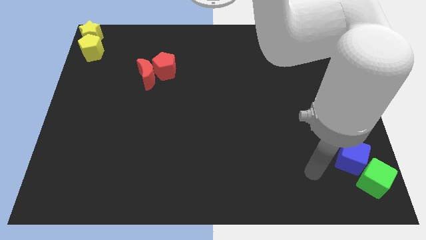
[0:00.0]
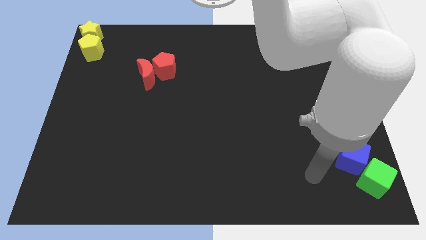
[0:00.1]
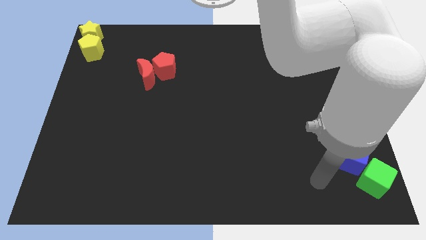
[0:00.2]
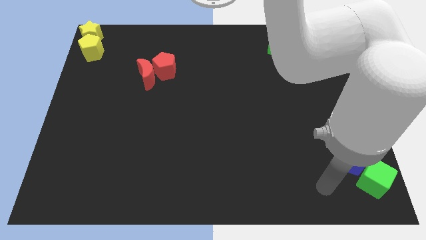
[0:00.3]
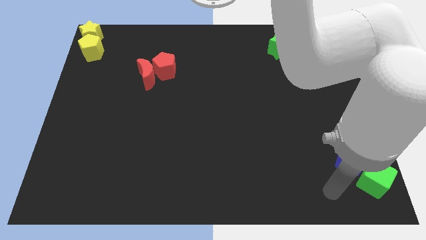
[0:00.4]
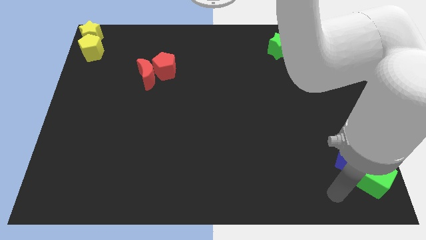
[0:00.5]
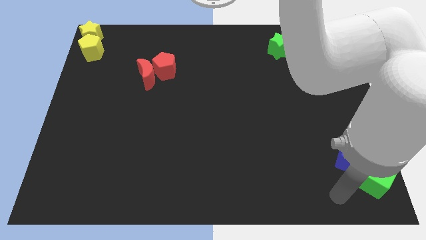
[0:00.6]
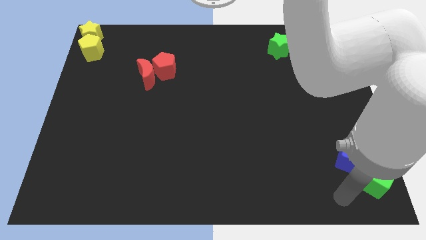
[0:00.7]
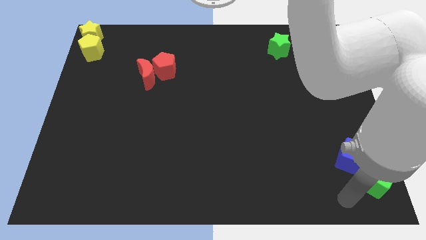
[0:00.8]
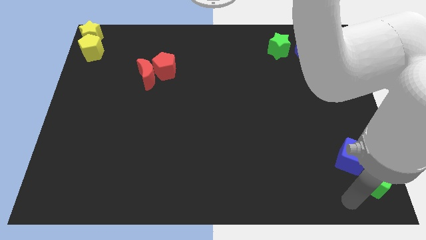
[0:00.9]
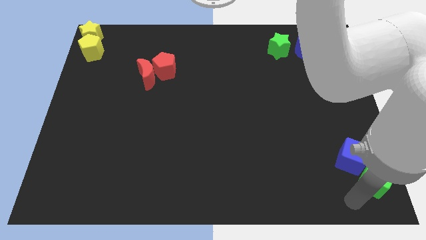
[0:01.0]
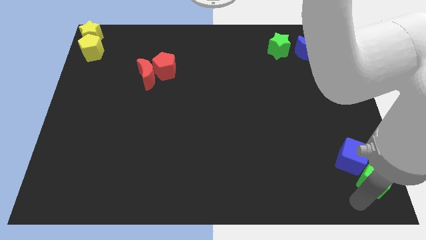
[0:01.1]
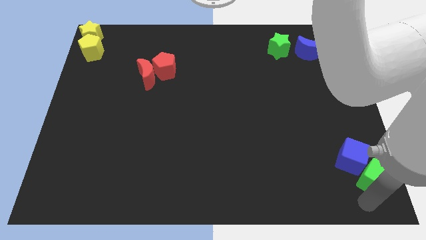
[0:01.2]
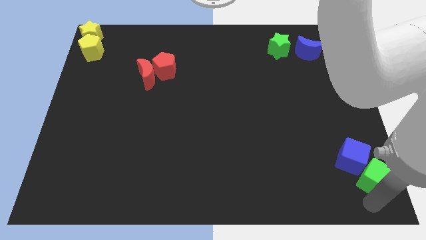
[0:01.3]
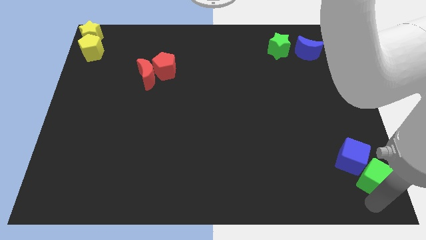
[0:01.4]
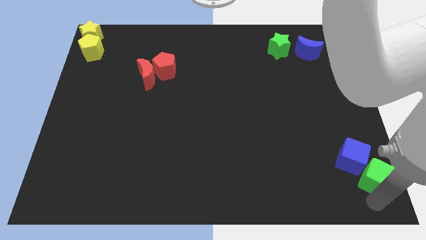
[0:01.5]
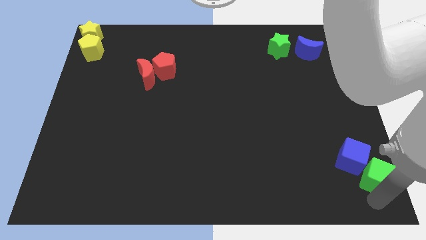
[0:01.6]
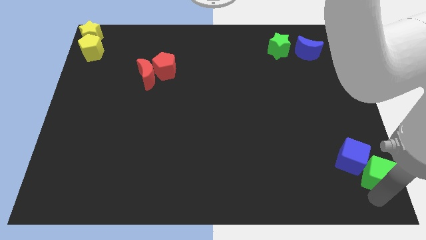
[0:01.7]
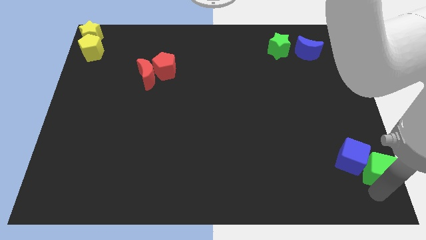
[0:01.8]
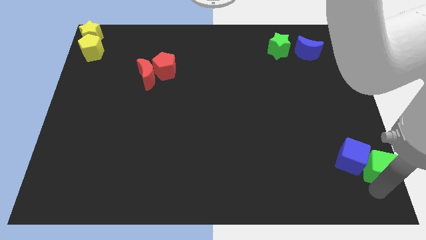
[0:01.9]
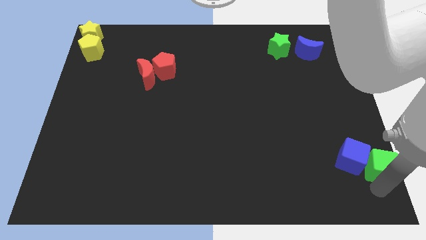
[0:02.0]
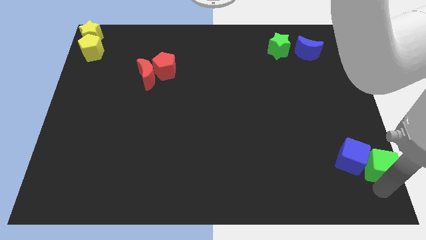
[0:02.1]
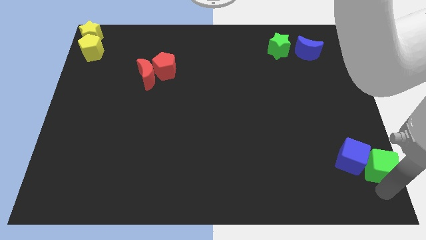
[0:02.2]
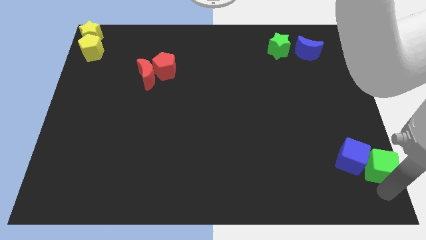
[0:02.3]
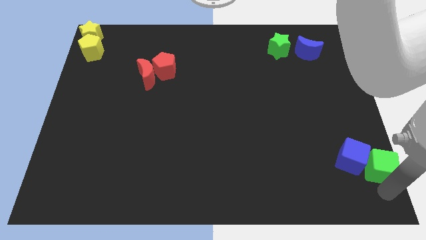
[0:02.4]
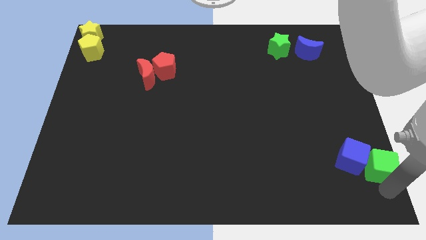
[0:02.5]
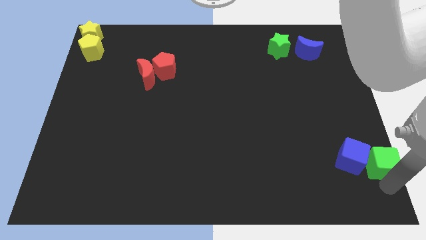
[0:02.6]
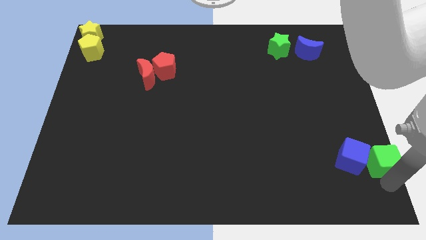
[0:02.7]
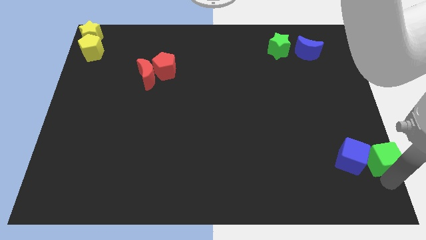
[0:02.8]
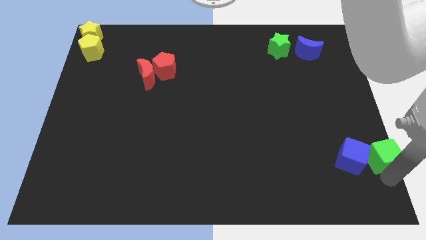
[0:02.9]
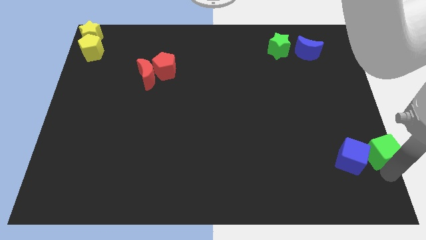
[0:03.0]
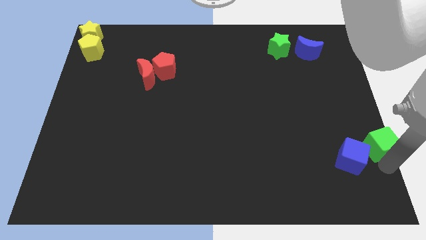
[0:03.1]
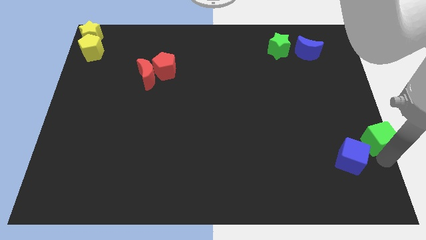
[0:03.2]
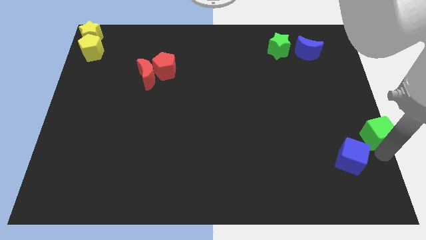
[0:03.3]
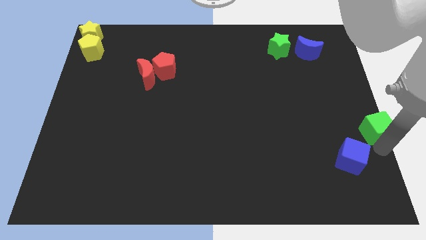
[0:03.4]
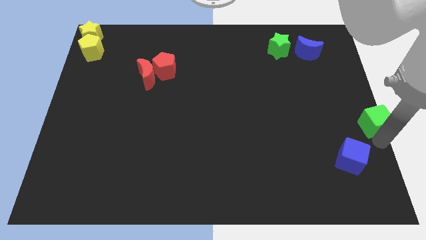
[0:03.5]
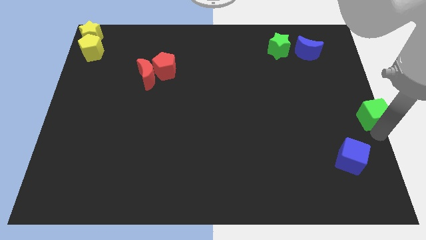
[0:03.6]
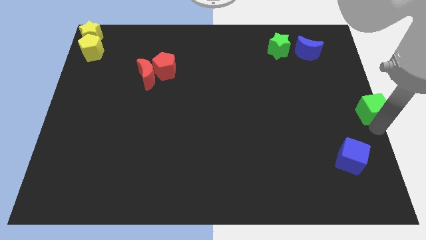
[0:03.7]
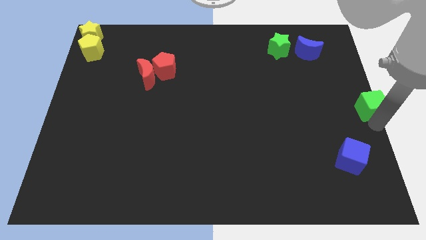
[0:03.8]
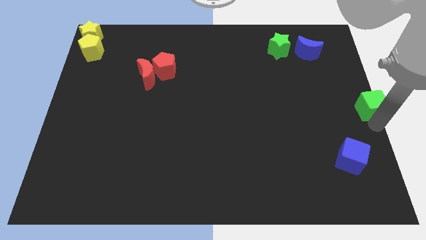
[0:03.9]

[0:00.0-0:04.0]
move the green cube to the right center of the board

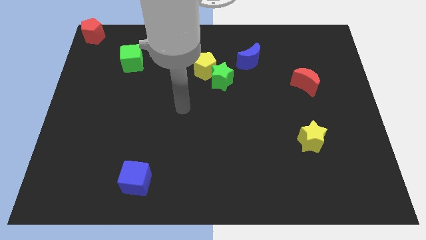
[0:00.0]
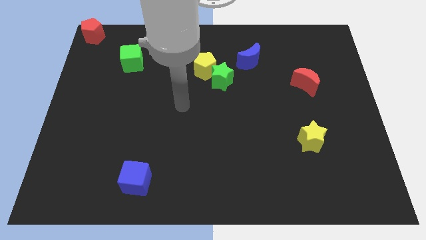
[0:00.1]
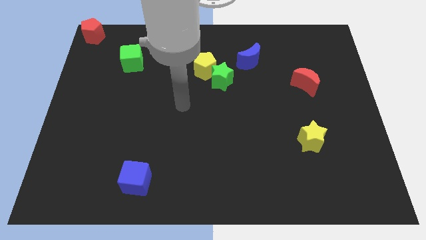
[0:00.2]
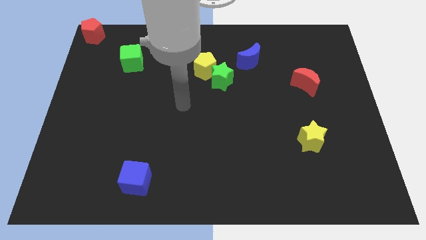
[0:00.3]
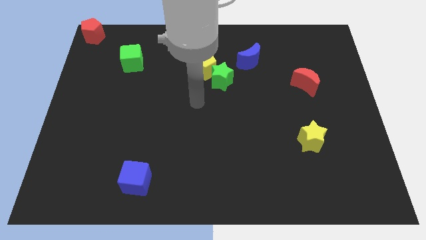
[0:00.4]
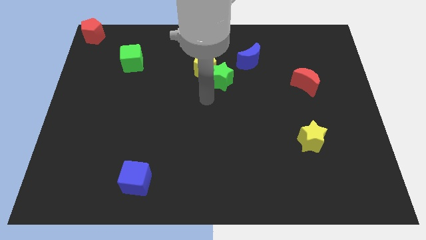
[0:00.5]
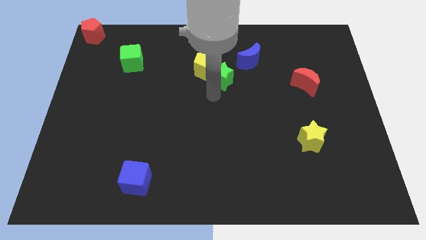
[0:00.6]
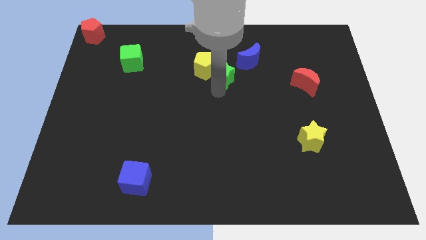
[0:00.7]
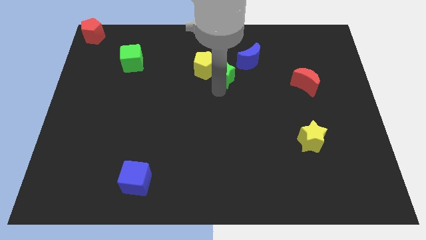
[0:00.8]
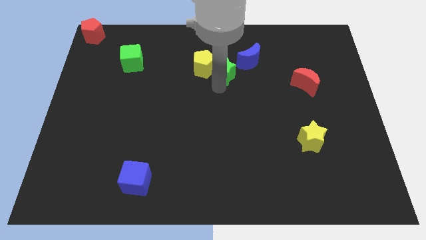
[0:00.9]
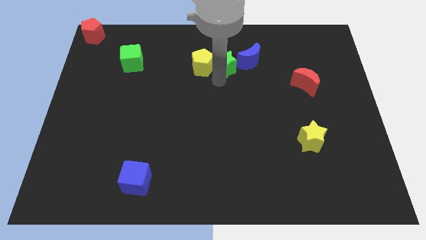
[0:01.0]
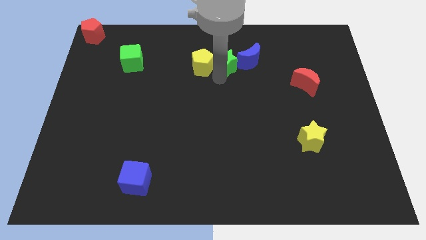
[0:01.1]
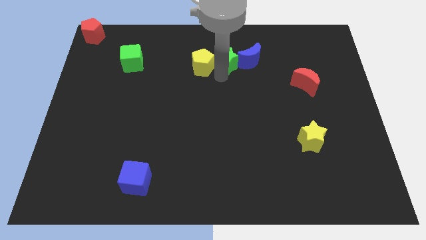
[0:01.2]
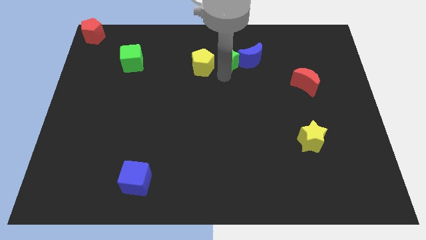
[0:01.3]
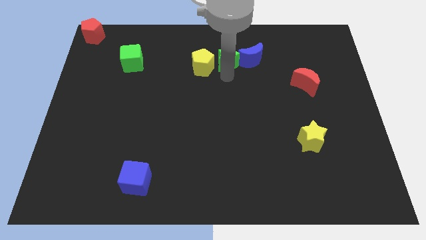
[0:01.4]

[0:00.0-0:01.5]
place the green star in between the blue moon and the yellow pentagon

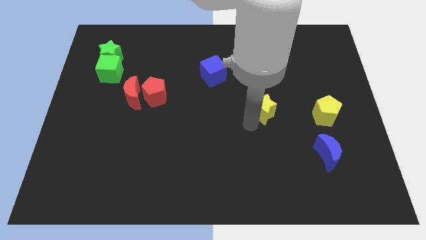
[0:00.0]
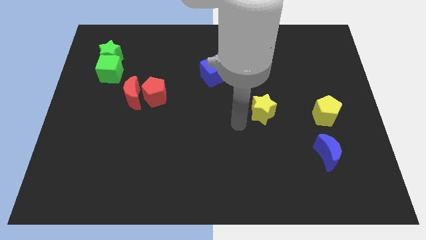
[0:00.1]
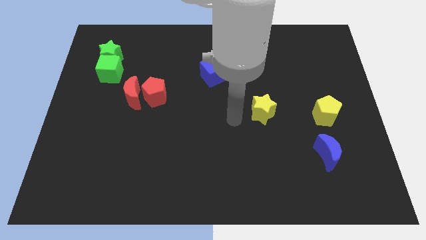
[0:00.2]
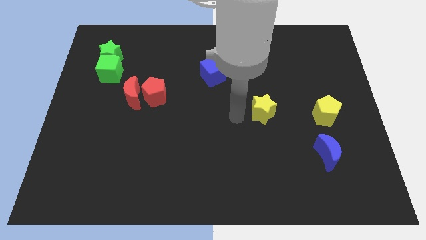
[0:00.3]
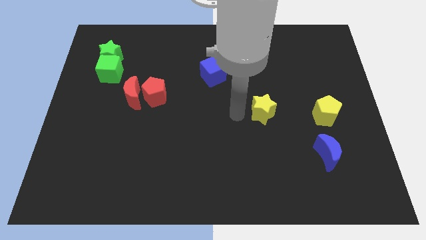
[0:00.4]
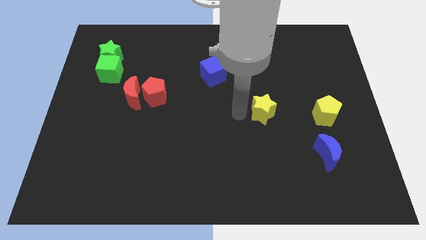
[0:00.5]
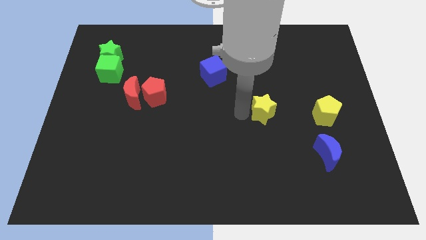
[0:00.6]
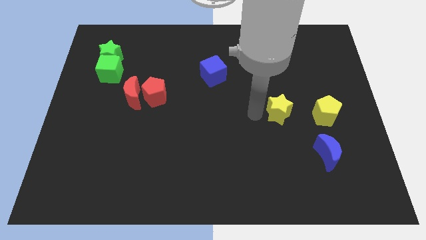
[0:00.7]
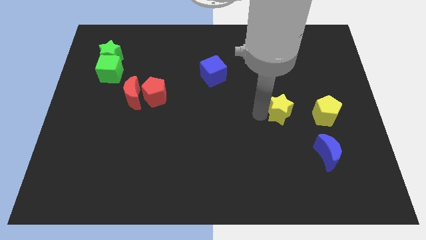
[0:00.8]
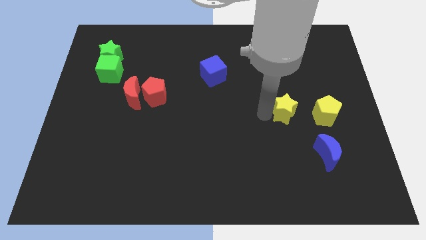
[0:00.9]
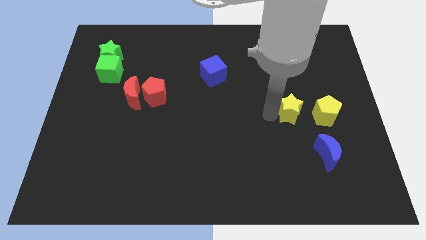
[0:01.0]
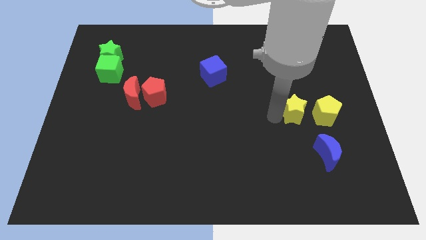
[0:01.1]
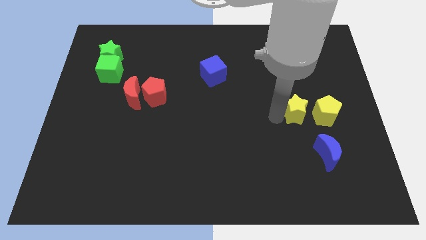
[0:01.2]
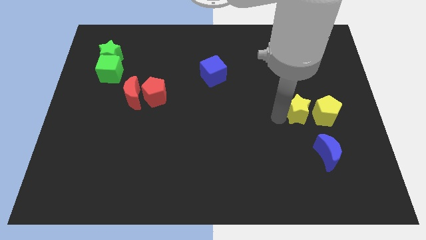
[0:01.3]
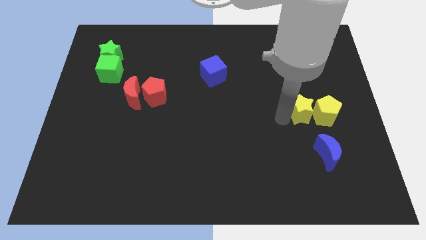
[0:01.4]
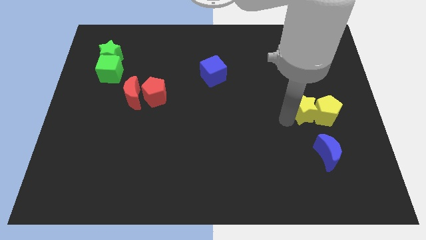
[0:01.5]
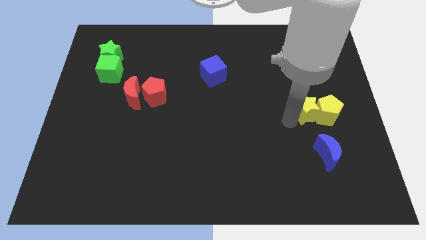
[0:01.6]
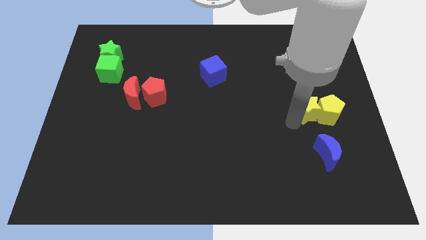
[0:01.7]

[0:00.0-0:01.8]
place the yellow star to the left of the yellow pentagon

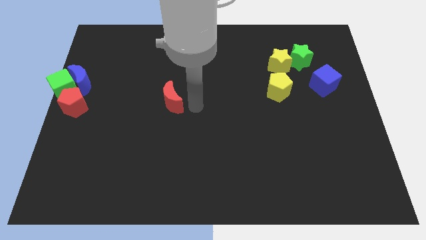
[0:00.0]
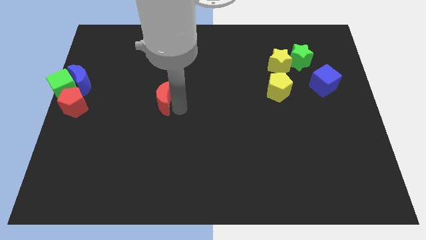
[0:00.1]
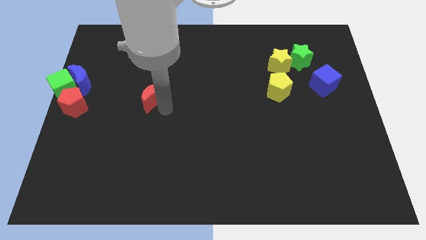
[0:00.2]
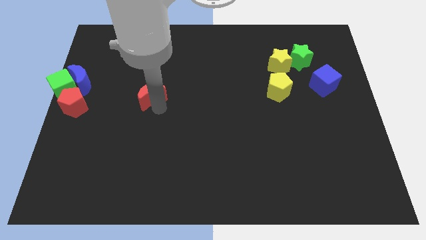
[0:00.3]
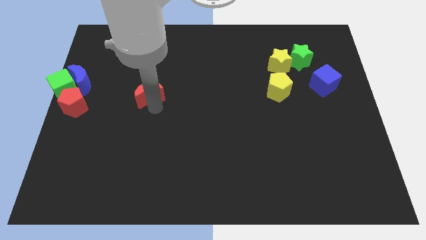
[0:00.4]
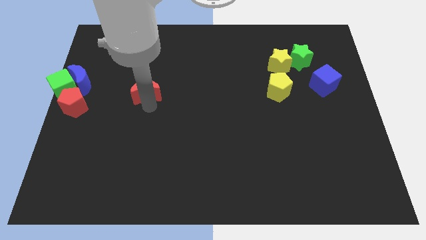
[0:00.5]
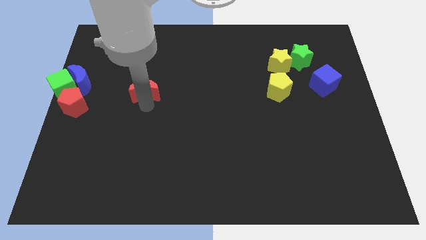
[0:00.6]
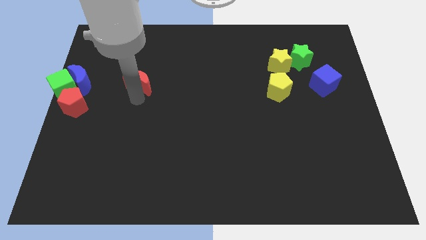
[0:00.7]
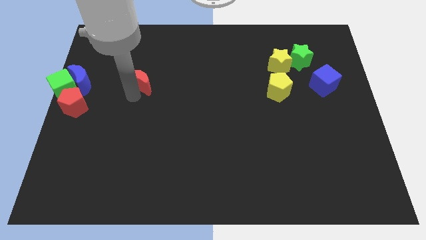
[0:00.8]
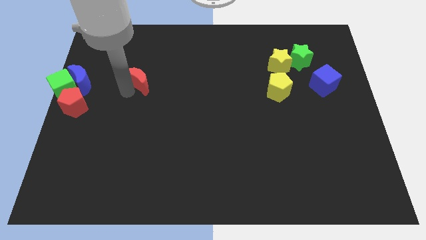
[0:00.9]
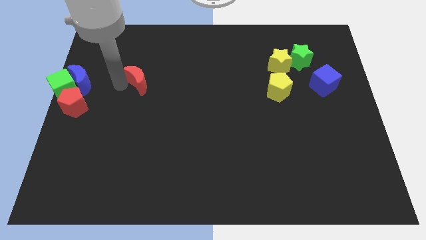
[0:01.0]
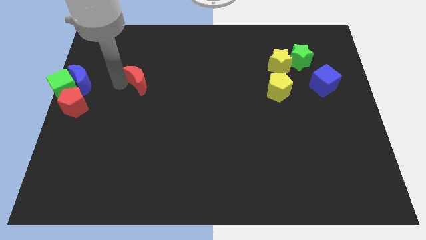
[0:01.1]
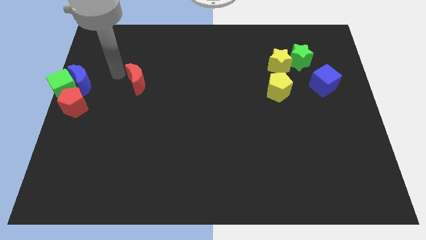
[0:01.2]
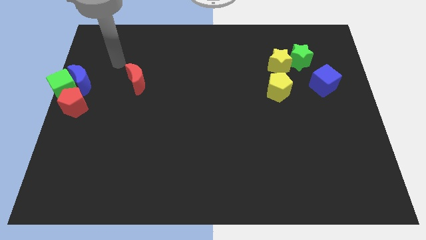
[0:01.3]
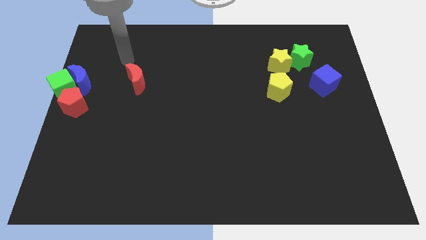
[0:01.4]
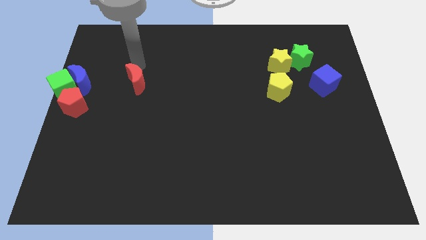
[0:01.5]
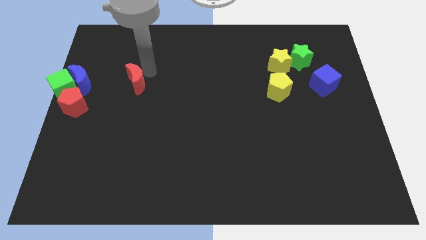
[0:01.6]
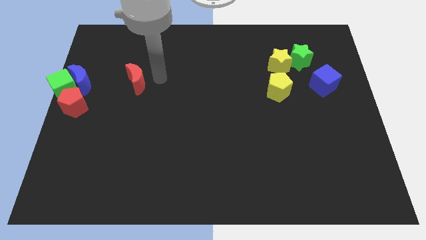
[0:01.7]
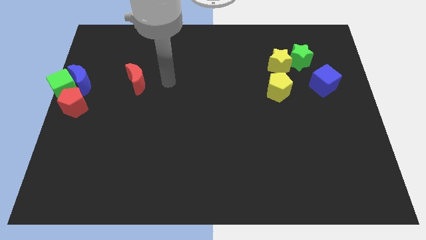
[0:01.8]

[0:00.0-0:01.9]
turn the red moon towards the blue moon

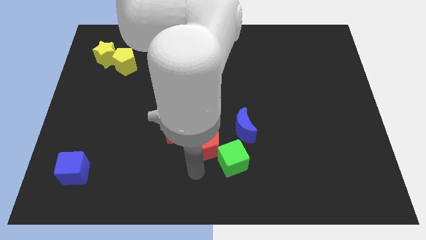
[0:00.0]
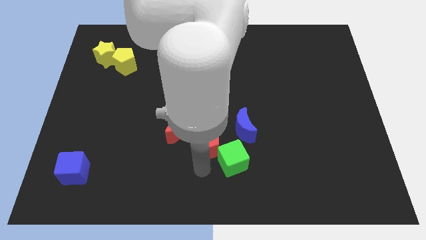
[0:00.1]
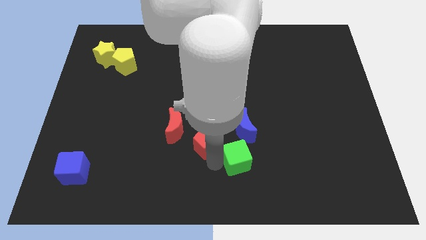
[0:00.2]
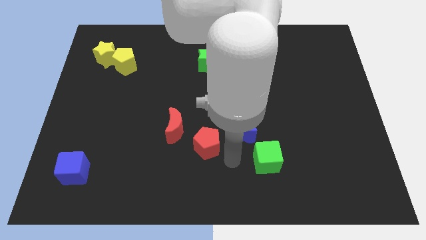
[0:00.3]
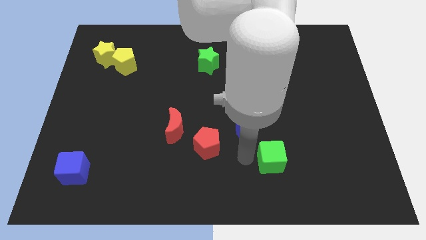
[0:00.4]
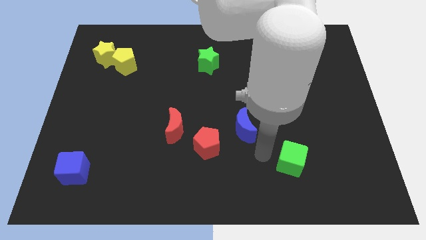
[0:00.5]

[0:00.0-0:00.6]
place the green cube diagonally bottom right to the blue moon
